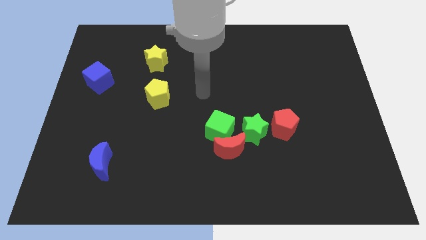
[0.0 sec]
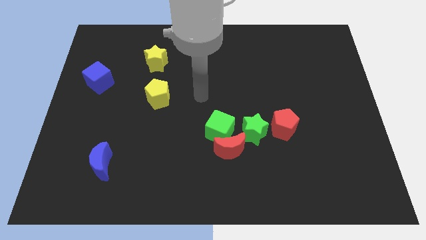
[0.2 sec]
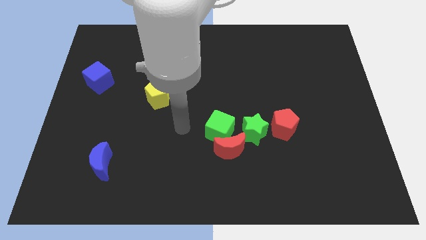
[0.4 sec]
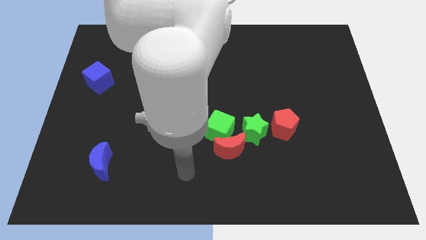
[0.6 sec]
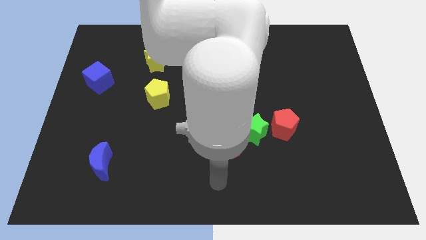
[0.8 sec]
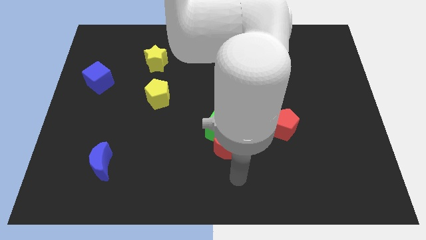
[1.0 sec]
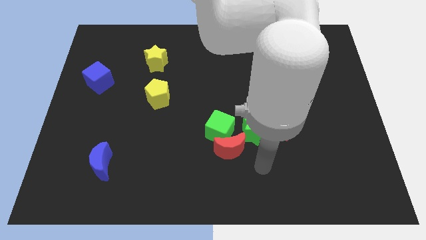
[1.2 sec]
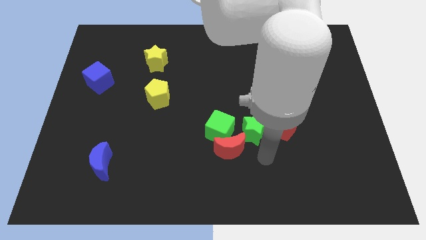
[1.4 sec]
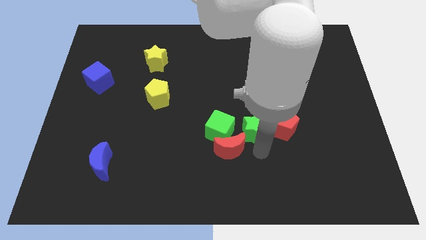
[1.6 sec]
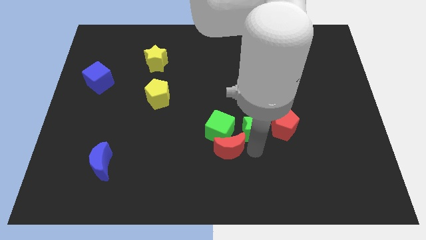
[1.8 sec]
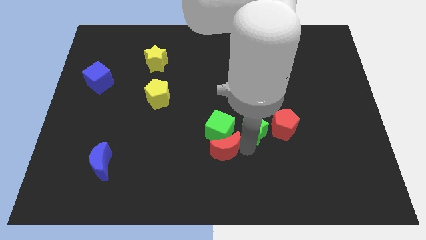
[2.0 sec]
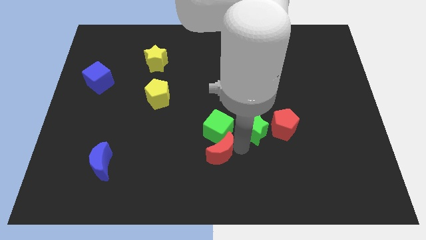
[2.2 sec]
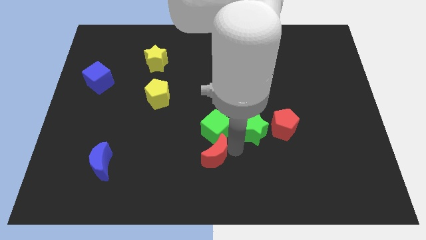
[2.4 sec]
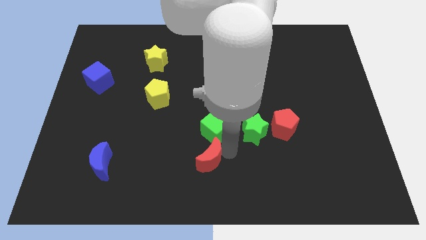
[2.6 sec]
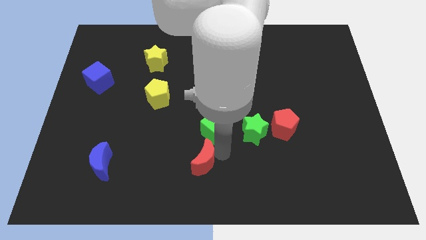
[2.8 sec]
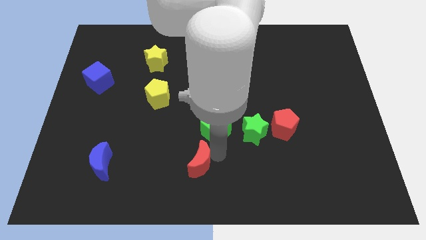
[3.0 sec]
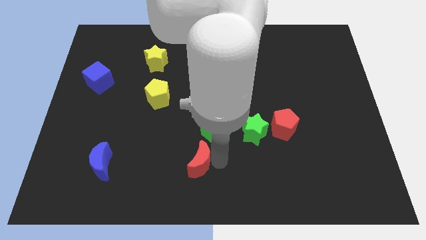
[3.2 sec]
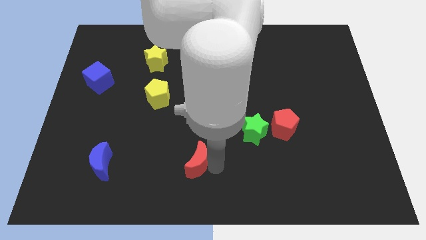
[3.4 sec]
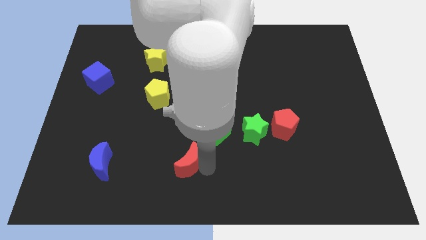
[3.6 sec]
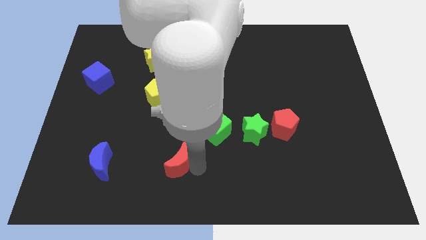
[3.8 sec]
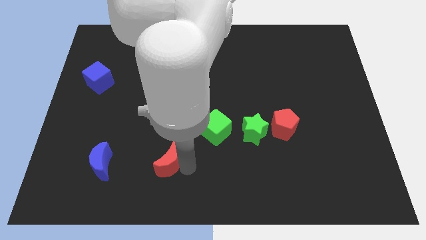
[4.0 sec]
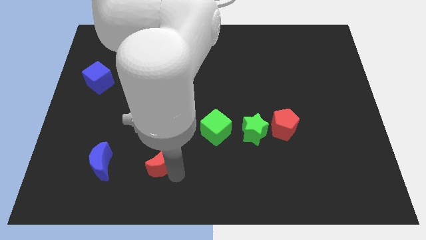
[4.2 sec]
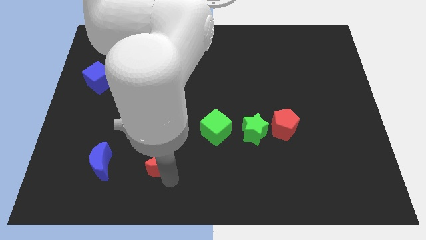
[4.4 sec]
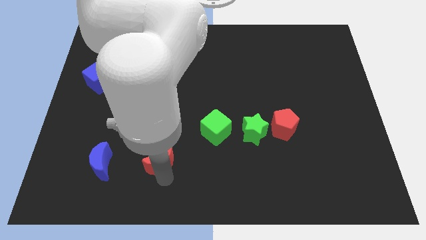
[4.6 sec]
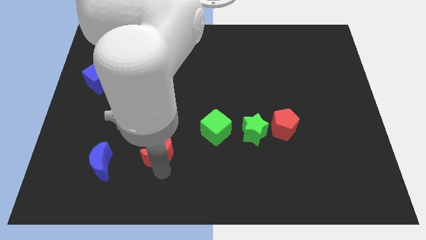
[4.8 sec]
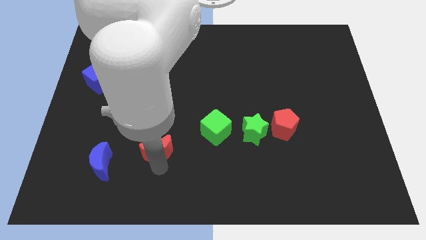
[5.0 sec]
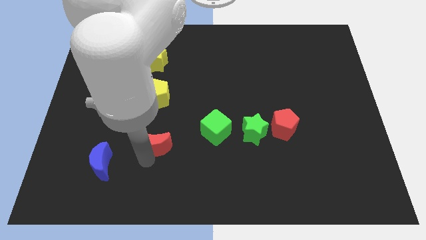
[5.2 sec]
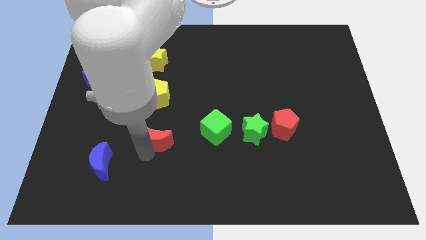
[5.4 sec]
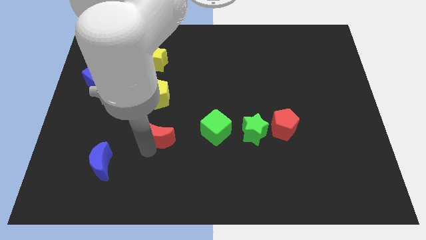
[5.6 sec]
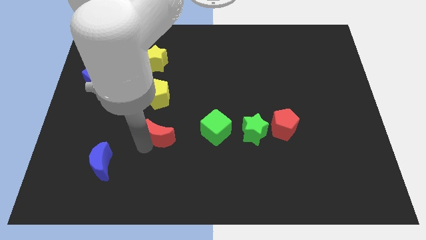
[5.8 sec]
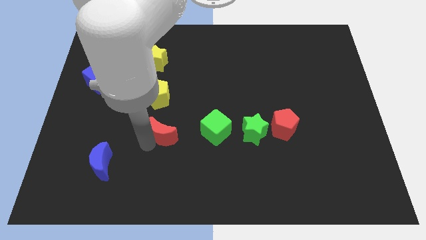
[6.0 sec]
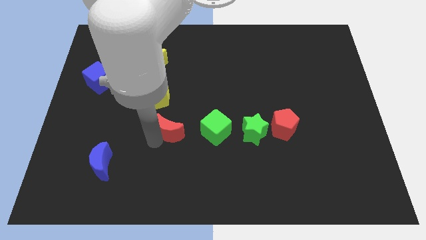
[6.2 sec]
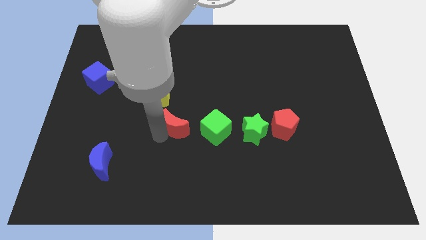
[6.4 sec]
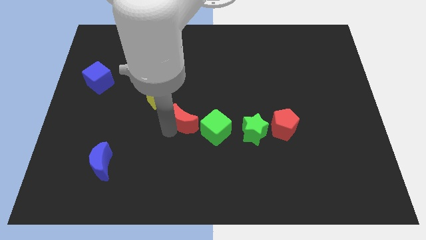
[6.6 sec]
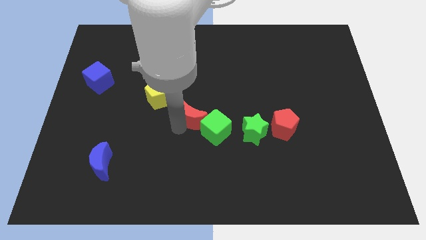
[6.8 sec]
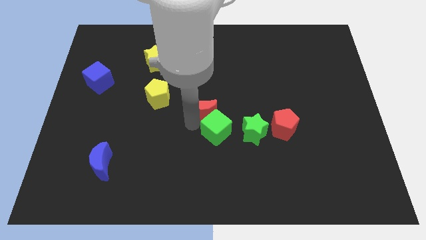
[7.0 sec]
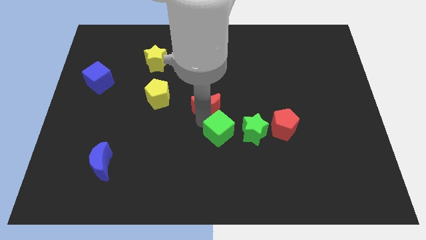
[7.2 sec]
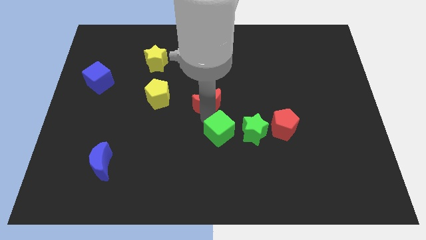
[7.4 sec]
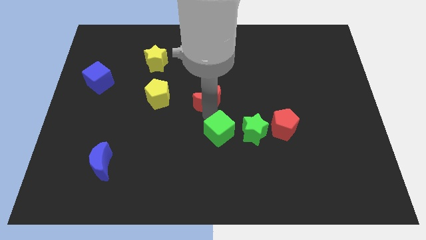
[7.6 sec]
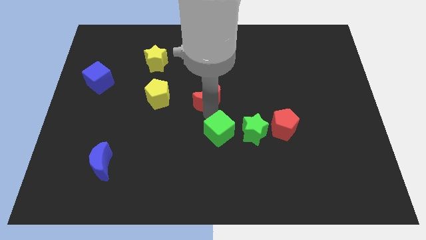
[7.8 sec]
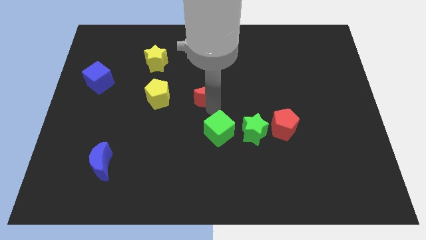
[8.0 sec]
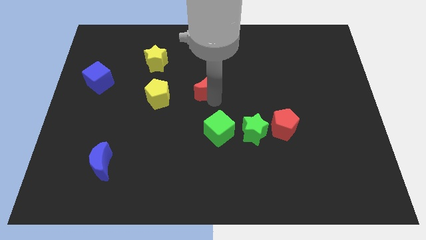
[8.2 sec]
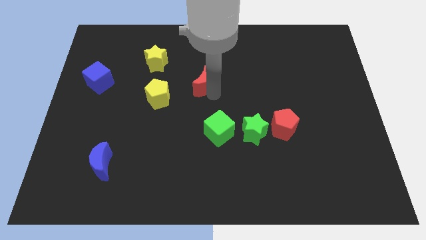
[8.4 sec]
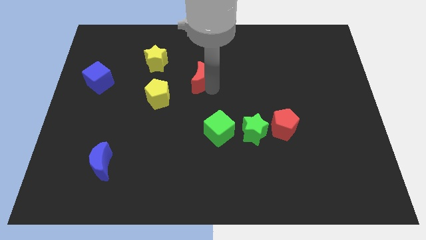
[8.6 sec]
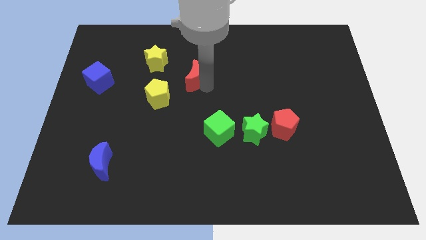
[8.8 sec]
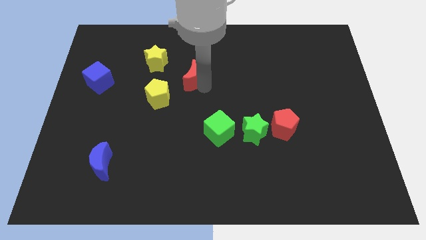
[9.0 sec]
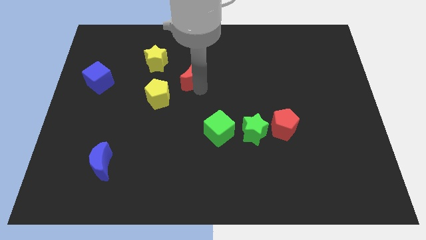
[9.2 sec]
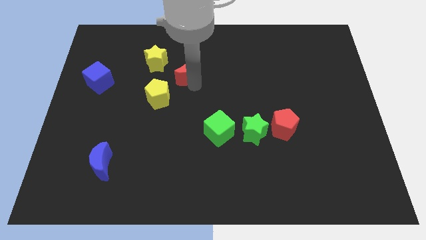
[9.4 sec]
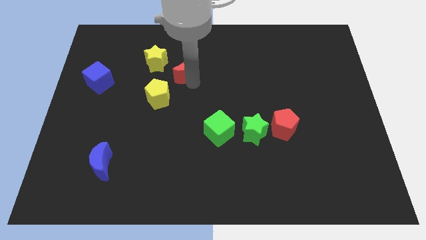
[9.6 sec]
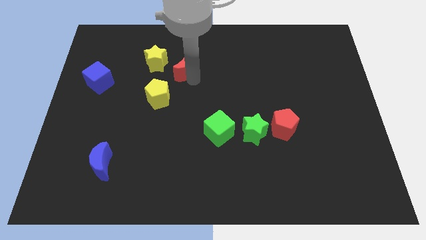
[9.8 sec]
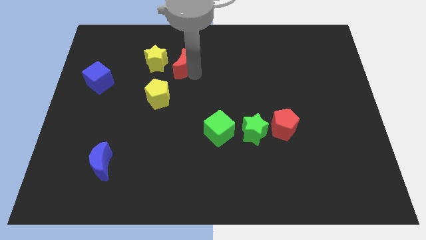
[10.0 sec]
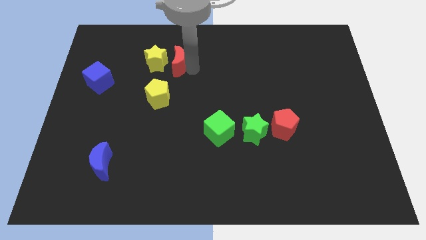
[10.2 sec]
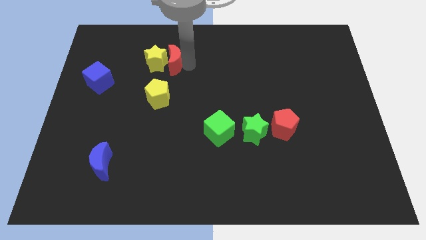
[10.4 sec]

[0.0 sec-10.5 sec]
put the red moon towards the yellow star

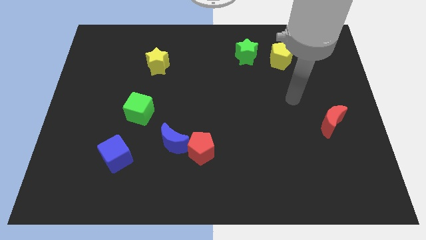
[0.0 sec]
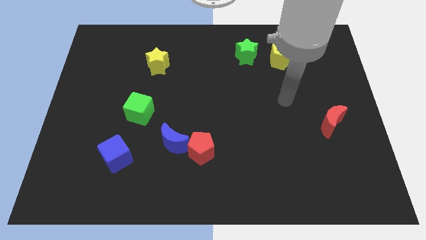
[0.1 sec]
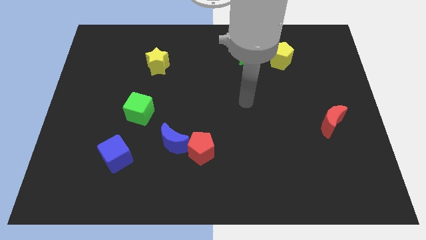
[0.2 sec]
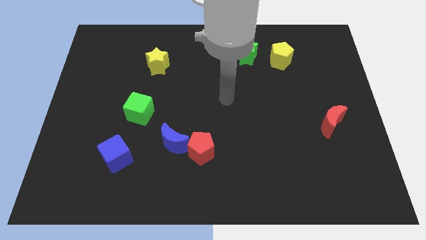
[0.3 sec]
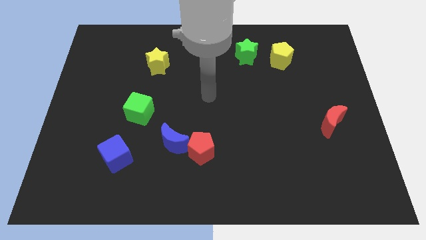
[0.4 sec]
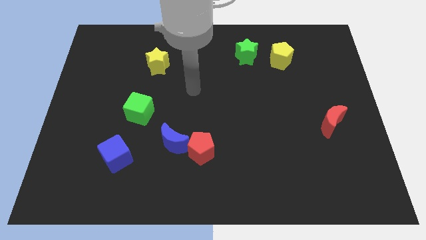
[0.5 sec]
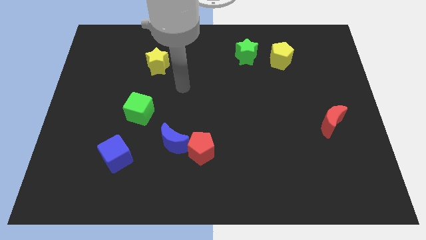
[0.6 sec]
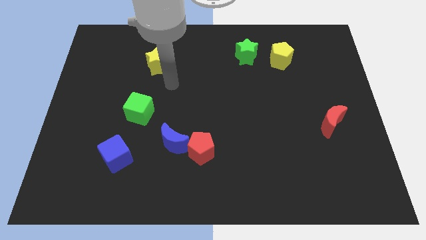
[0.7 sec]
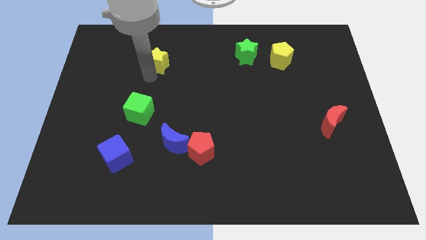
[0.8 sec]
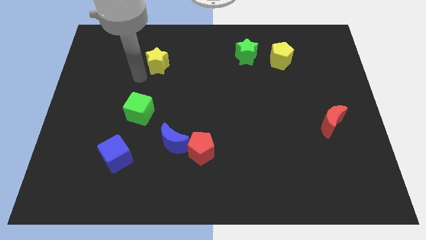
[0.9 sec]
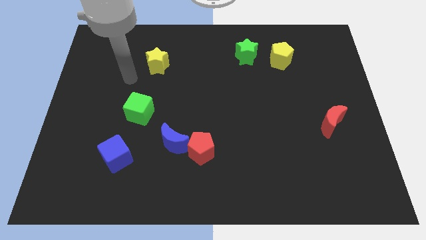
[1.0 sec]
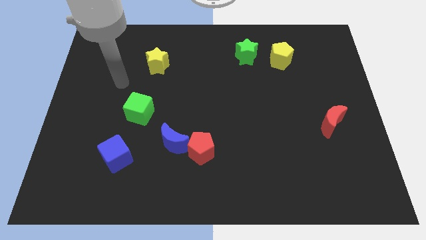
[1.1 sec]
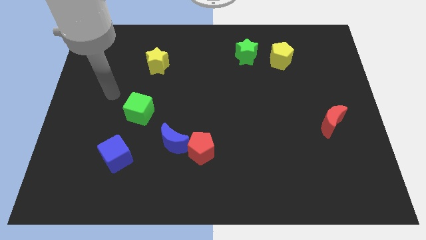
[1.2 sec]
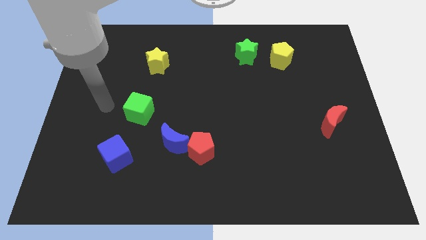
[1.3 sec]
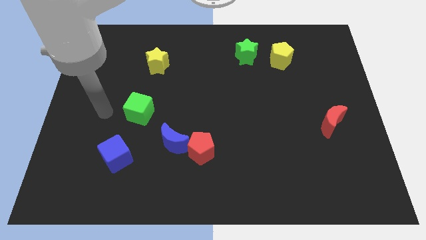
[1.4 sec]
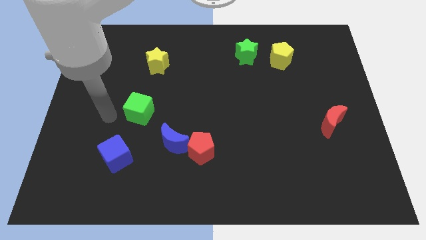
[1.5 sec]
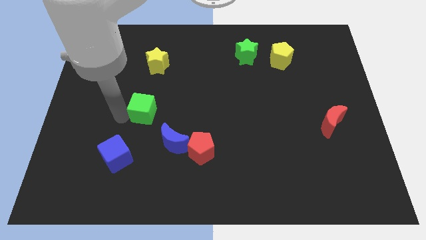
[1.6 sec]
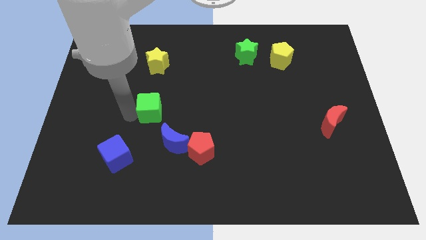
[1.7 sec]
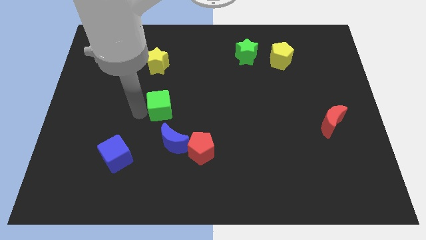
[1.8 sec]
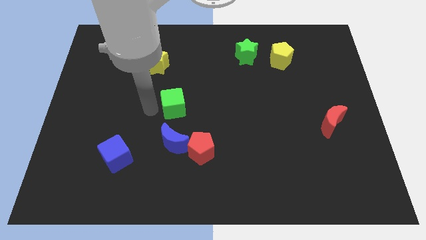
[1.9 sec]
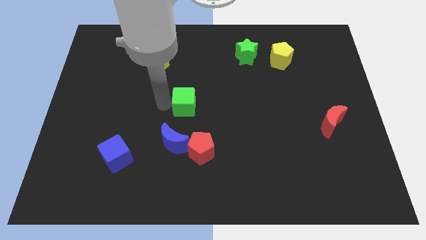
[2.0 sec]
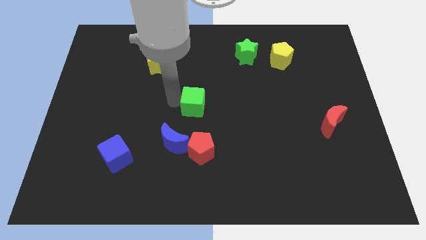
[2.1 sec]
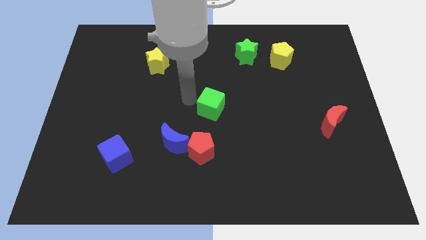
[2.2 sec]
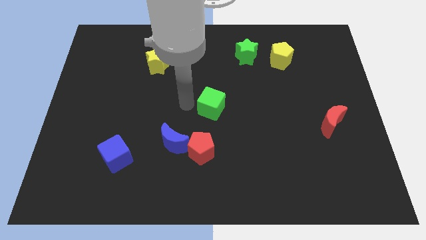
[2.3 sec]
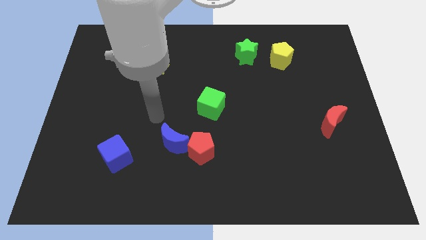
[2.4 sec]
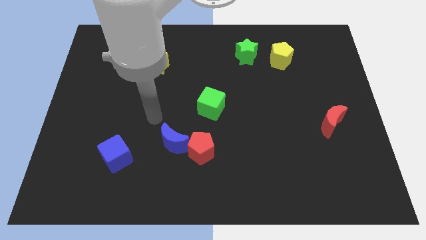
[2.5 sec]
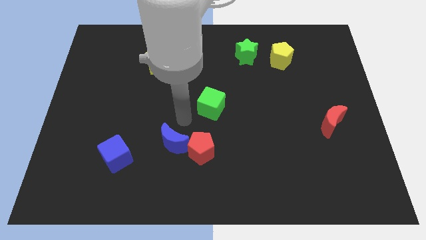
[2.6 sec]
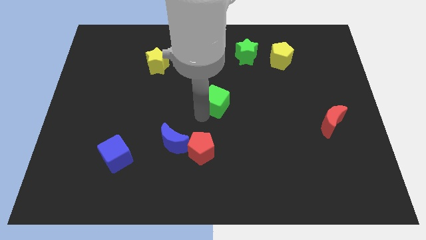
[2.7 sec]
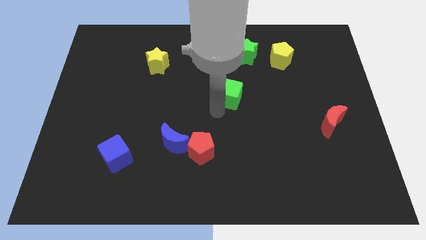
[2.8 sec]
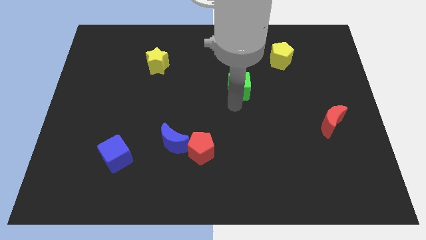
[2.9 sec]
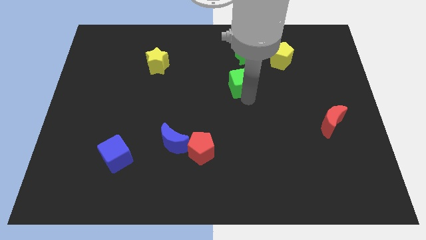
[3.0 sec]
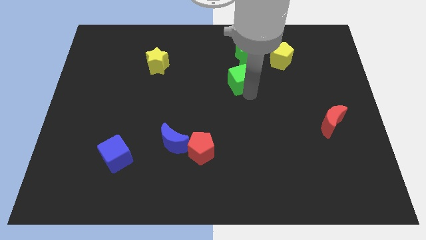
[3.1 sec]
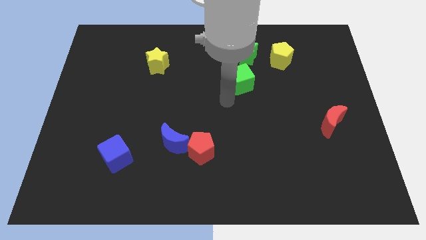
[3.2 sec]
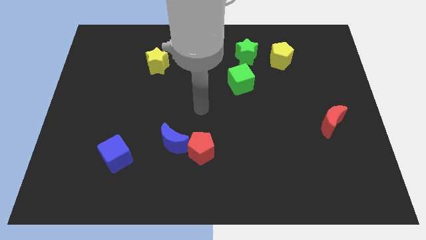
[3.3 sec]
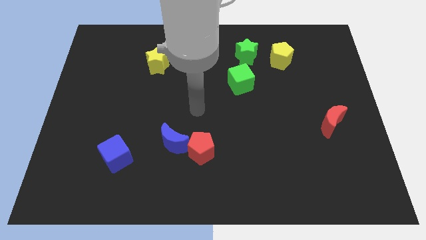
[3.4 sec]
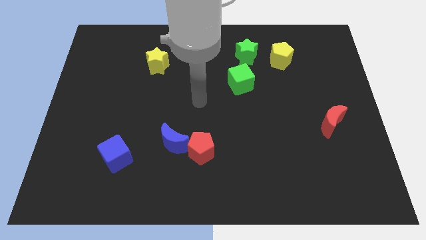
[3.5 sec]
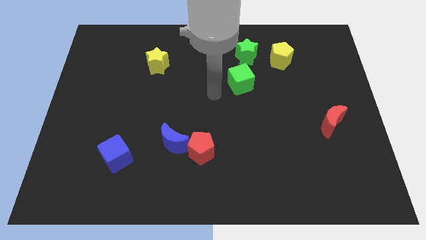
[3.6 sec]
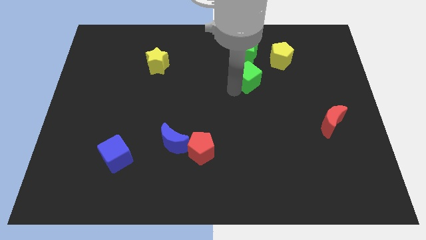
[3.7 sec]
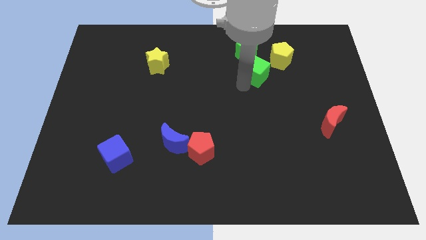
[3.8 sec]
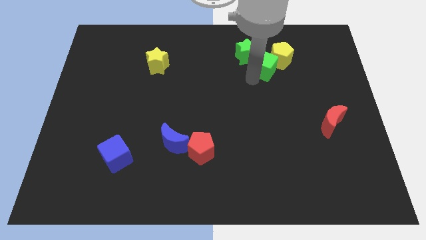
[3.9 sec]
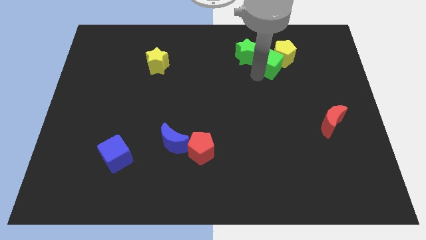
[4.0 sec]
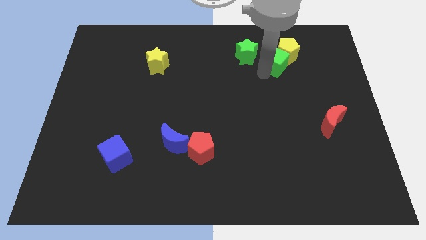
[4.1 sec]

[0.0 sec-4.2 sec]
push the green cube towards the yellow pentagon
